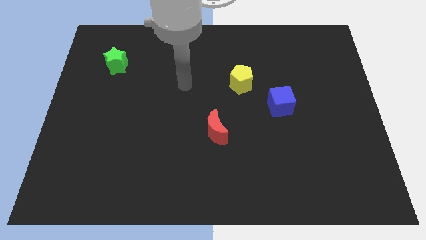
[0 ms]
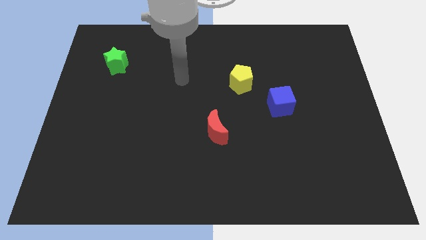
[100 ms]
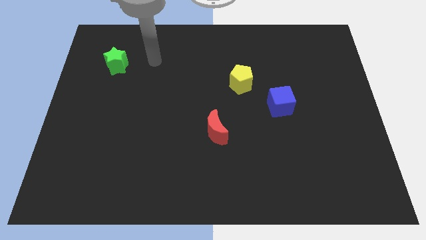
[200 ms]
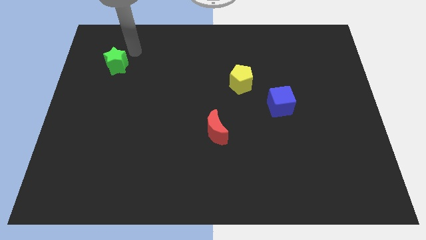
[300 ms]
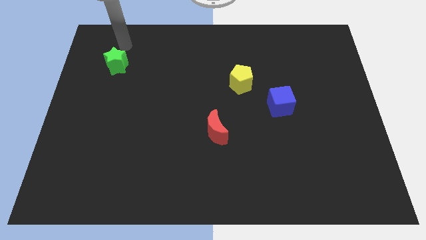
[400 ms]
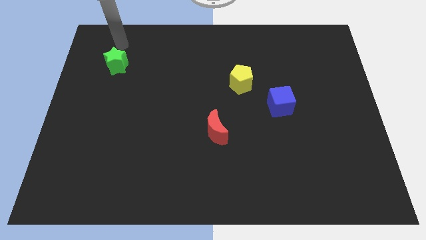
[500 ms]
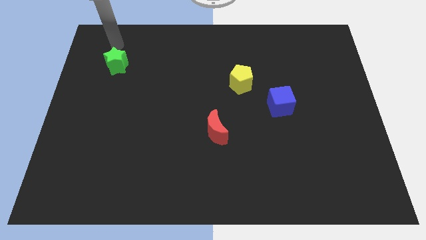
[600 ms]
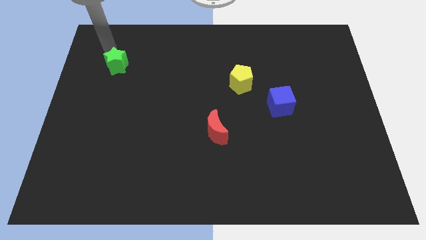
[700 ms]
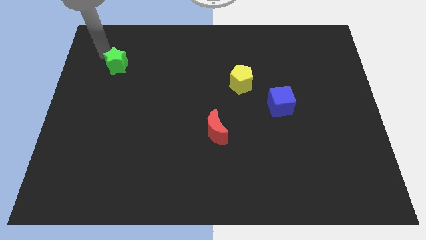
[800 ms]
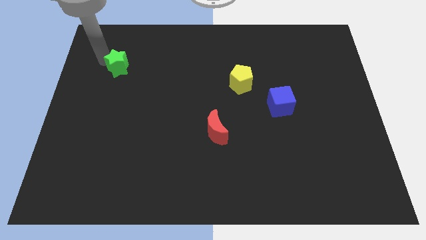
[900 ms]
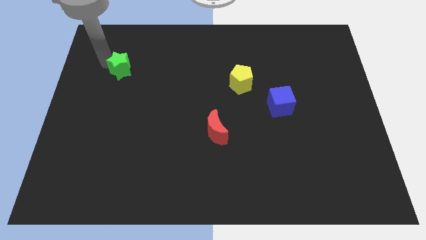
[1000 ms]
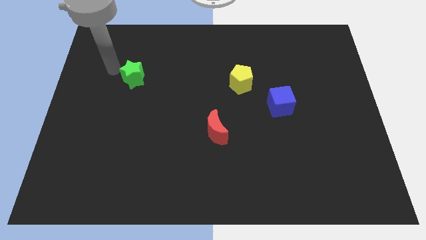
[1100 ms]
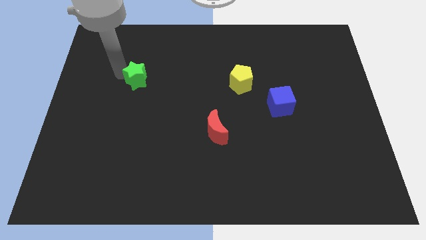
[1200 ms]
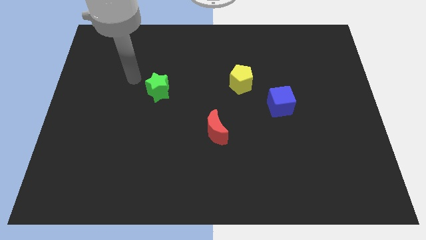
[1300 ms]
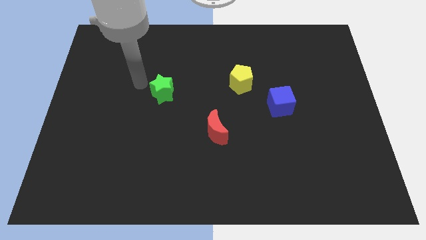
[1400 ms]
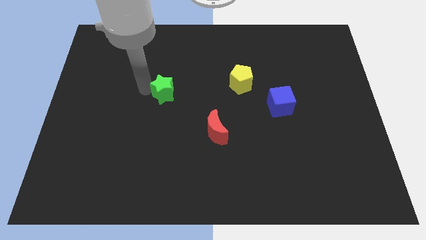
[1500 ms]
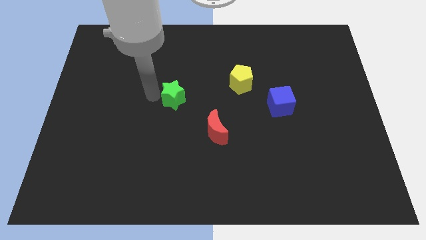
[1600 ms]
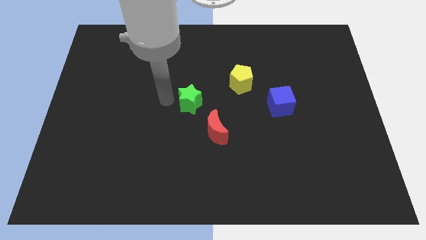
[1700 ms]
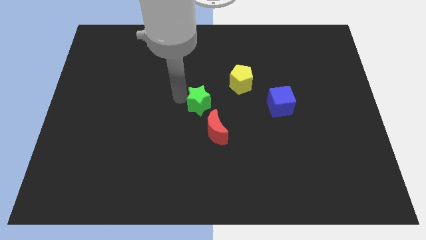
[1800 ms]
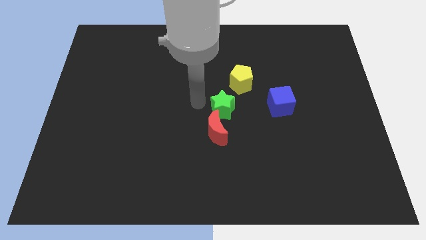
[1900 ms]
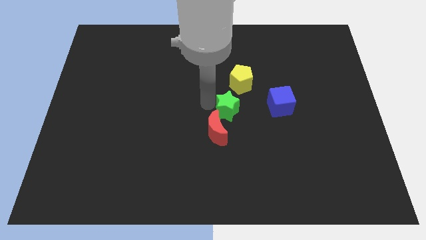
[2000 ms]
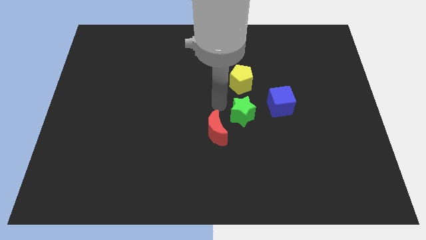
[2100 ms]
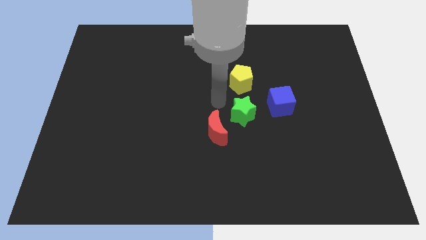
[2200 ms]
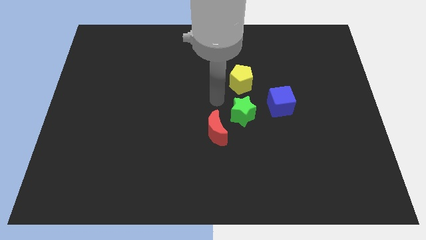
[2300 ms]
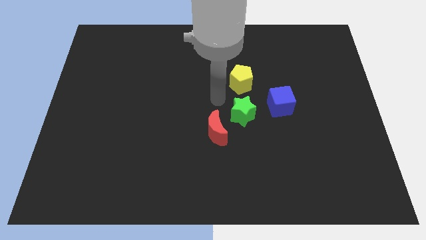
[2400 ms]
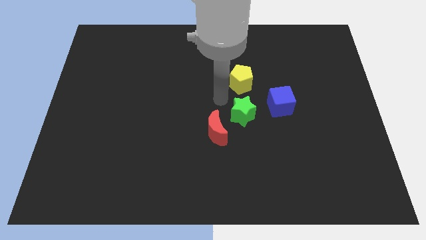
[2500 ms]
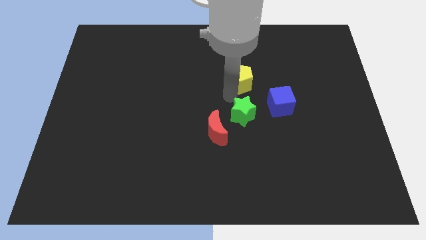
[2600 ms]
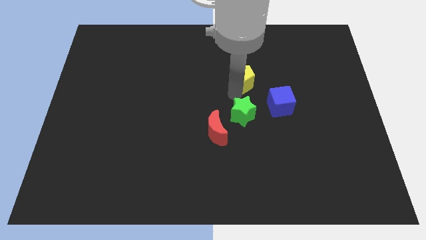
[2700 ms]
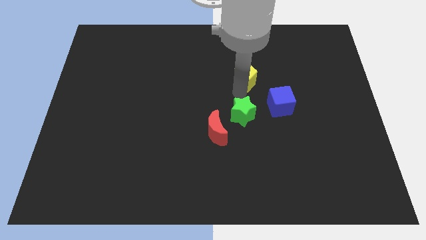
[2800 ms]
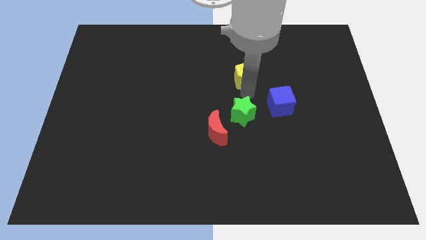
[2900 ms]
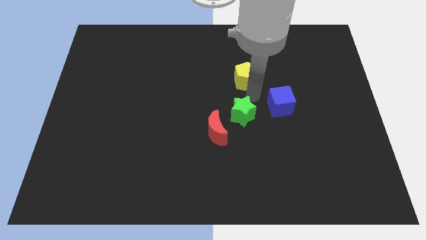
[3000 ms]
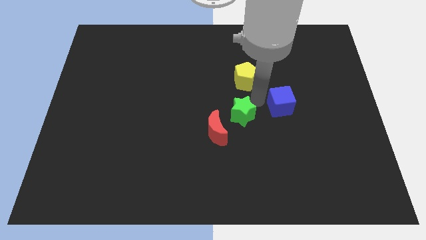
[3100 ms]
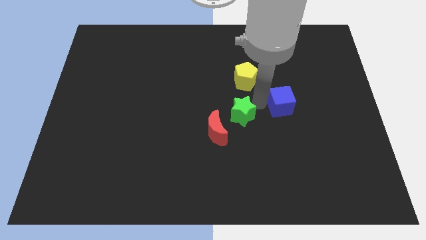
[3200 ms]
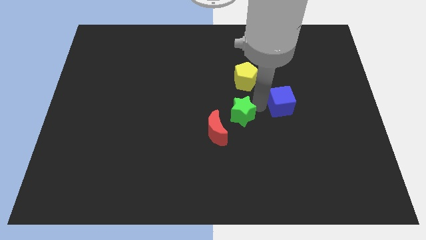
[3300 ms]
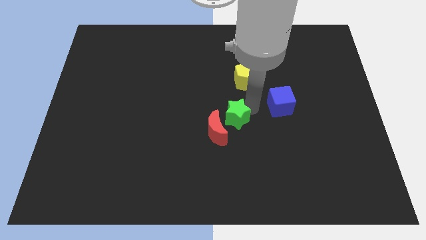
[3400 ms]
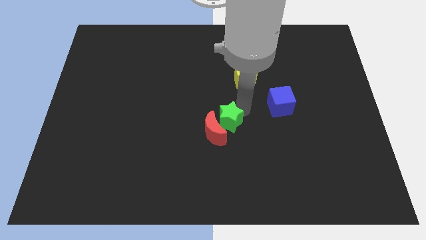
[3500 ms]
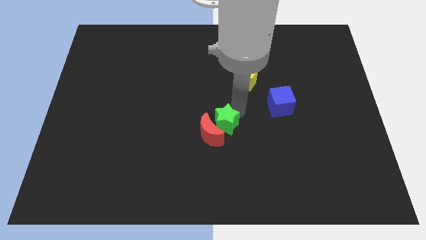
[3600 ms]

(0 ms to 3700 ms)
put the green block next to the red moon

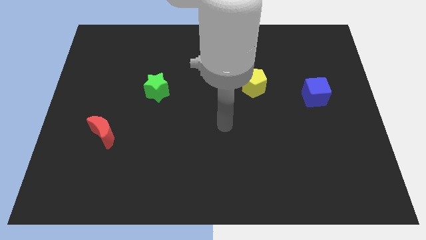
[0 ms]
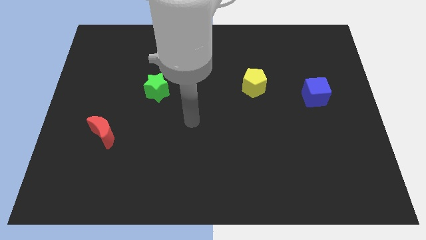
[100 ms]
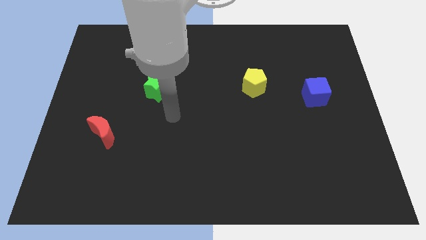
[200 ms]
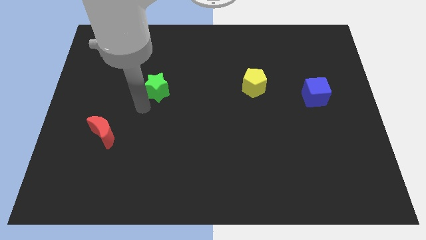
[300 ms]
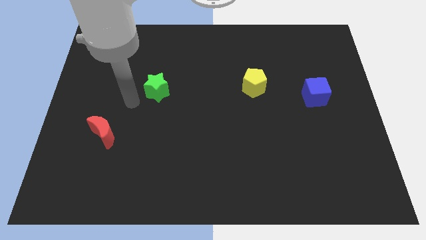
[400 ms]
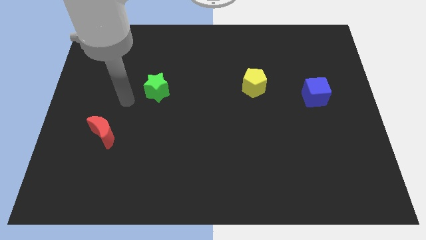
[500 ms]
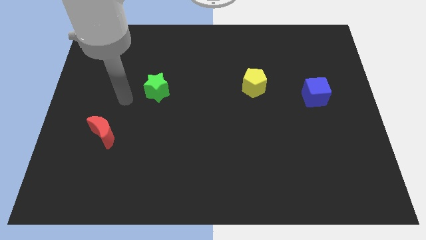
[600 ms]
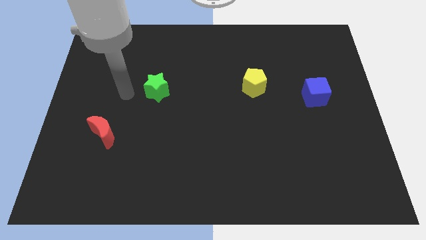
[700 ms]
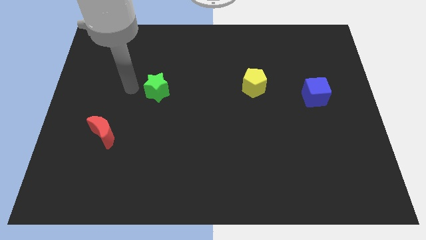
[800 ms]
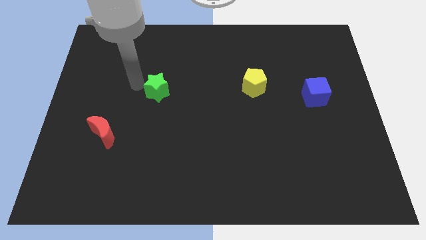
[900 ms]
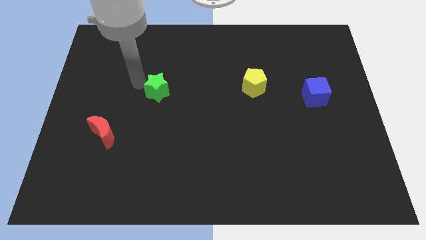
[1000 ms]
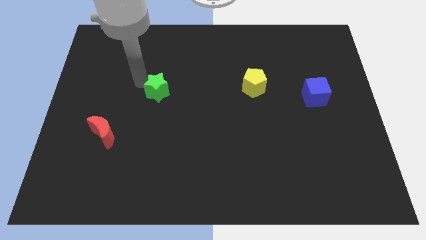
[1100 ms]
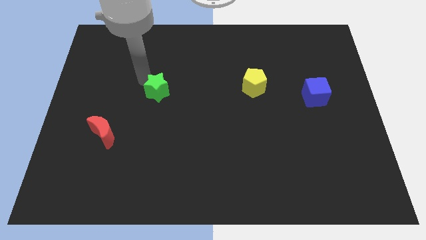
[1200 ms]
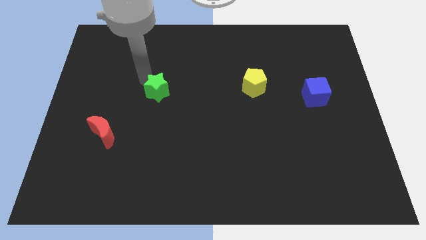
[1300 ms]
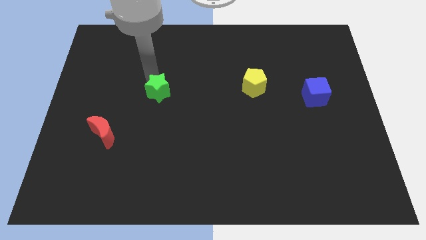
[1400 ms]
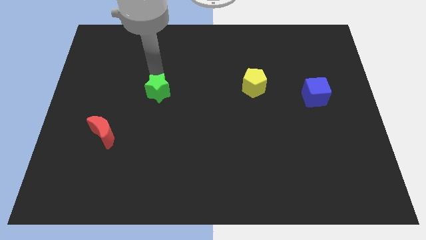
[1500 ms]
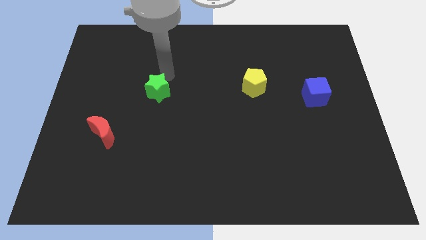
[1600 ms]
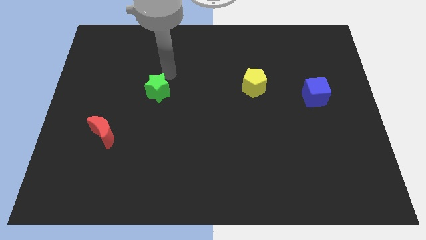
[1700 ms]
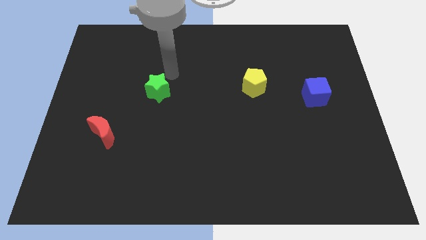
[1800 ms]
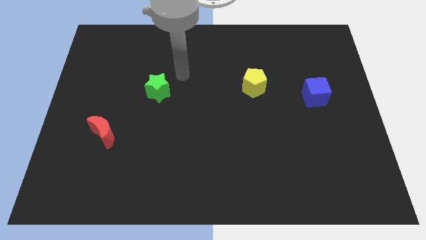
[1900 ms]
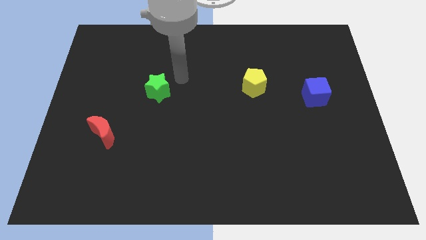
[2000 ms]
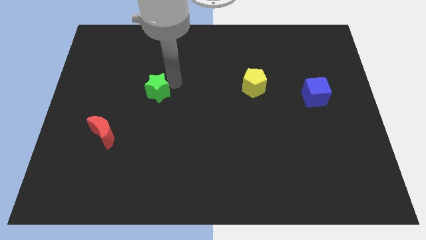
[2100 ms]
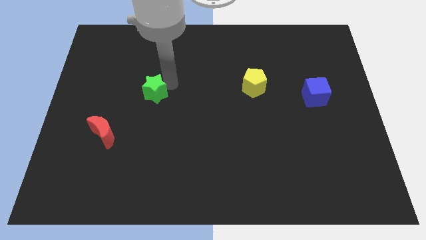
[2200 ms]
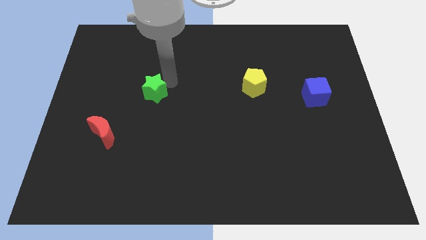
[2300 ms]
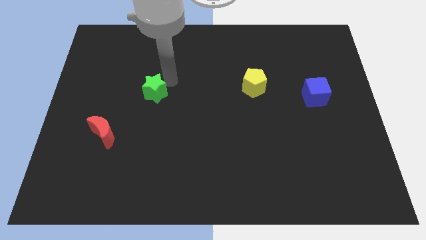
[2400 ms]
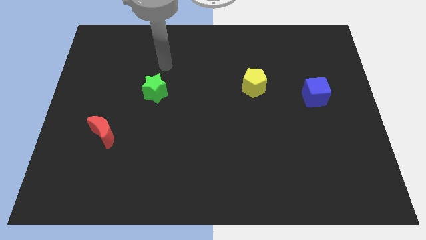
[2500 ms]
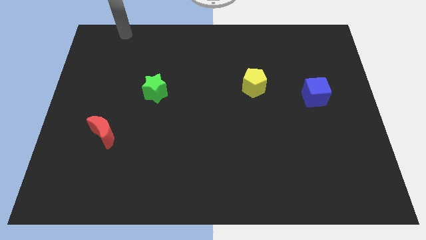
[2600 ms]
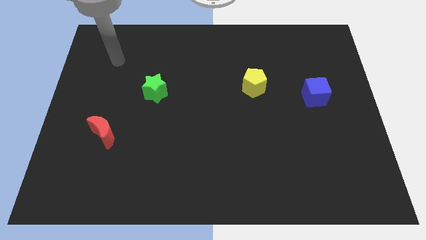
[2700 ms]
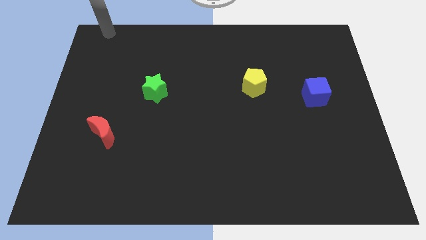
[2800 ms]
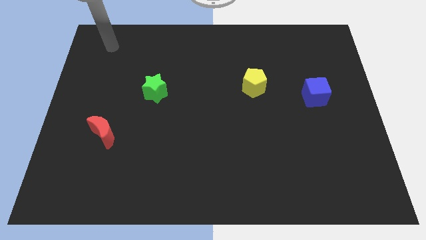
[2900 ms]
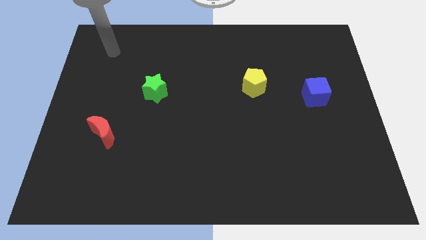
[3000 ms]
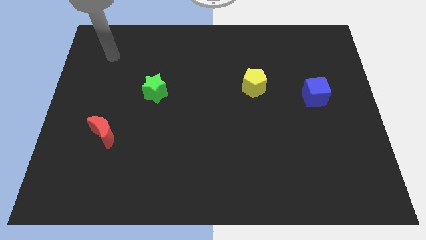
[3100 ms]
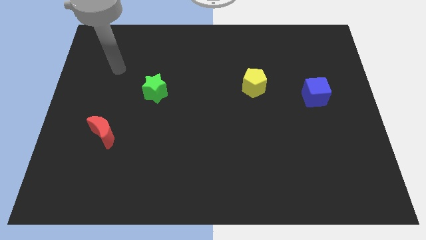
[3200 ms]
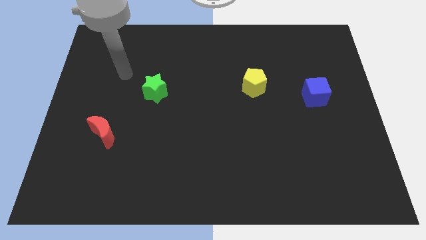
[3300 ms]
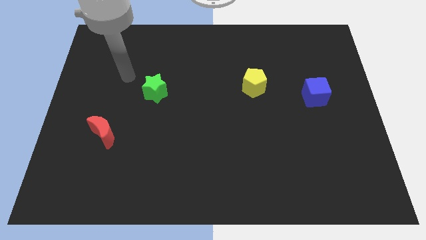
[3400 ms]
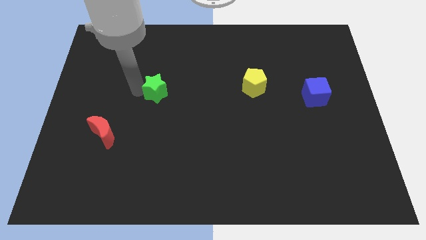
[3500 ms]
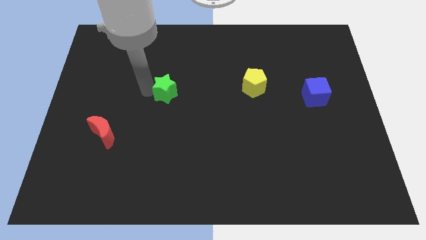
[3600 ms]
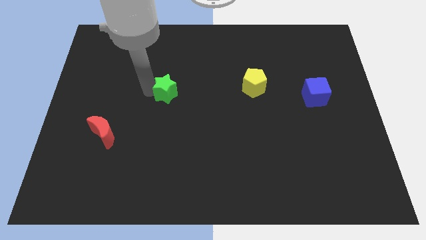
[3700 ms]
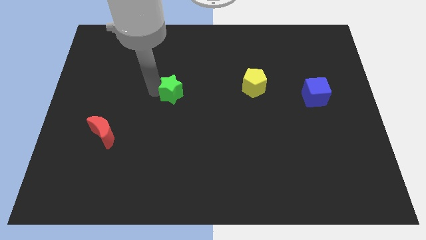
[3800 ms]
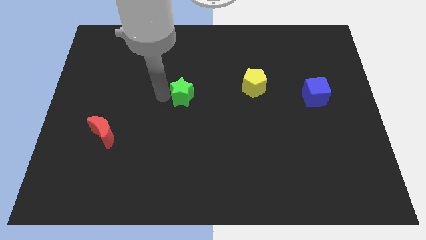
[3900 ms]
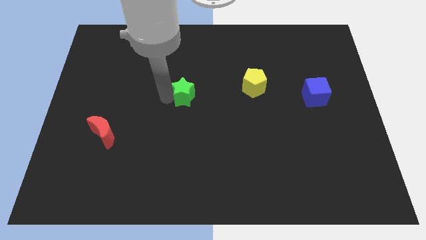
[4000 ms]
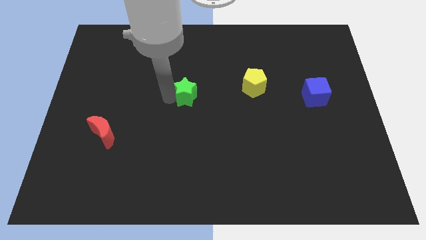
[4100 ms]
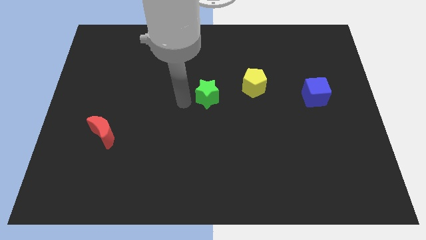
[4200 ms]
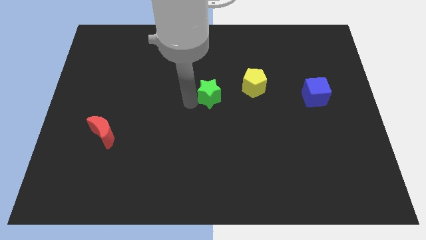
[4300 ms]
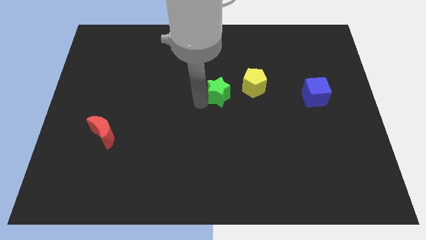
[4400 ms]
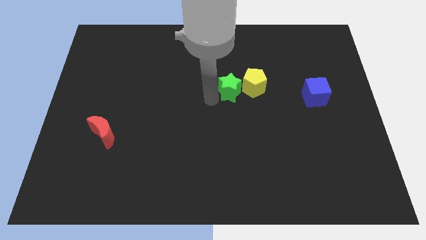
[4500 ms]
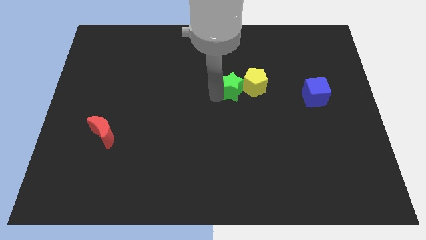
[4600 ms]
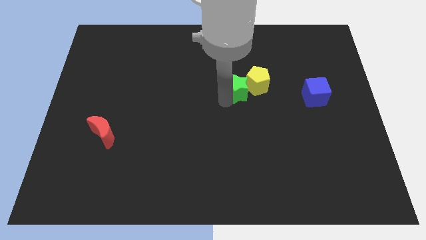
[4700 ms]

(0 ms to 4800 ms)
move the green star to the pentagon
